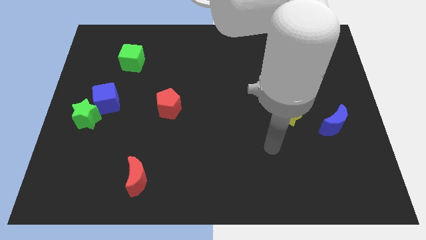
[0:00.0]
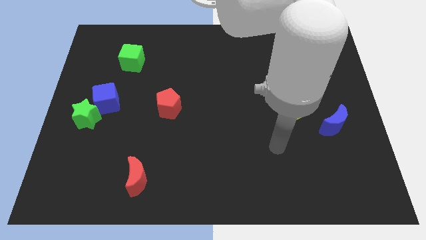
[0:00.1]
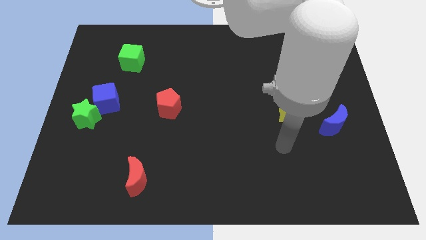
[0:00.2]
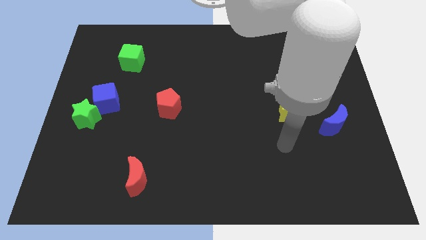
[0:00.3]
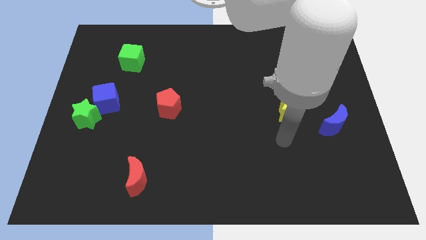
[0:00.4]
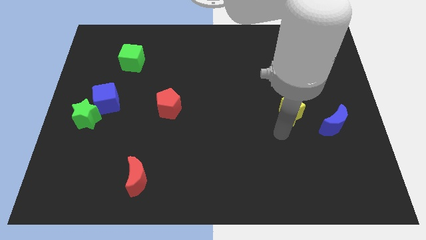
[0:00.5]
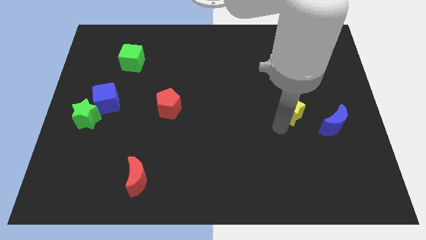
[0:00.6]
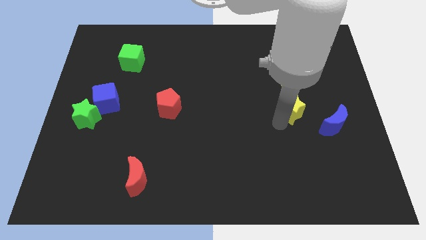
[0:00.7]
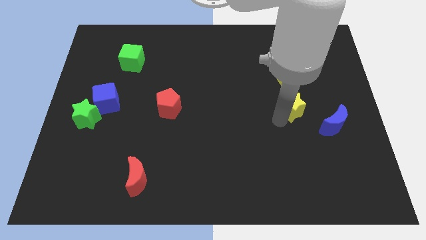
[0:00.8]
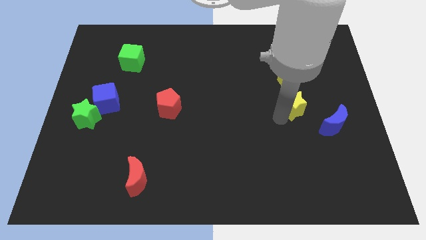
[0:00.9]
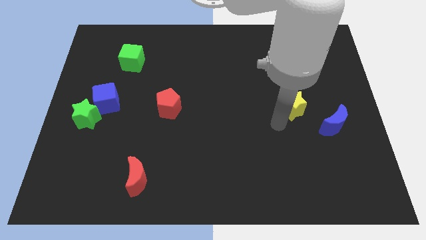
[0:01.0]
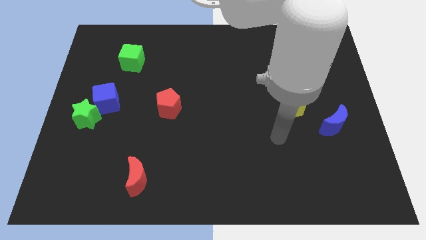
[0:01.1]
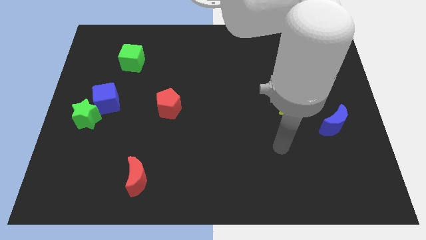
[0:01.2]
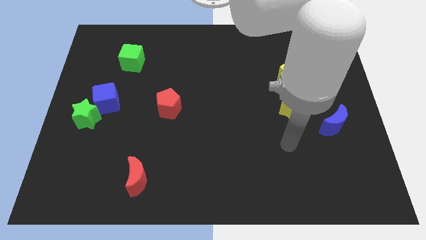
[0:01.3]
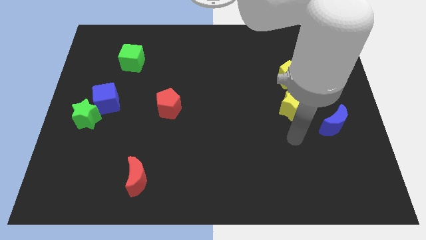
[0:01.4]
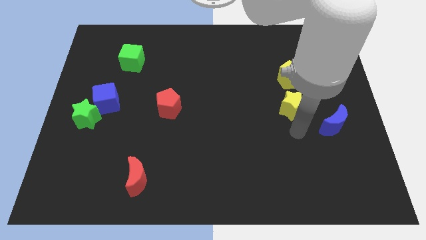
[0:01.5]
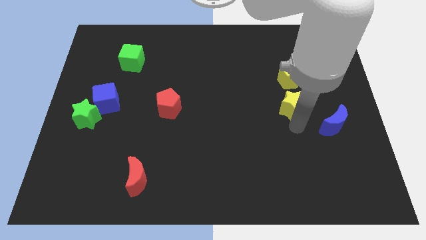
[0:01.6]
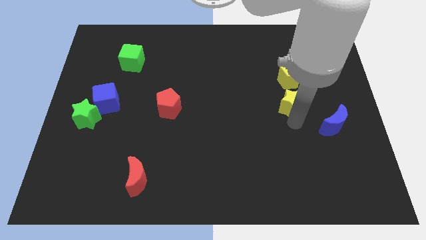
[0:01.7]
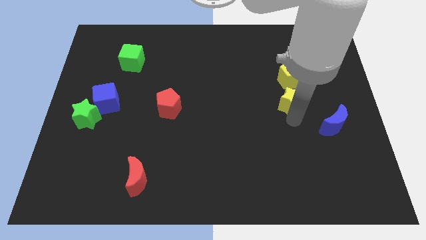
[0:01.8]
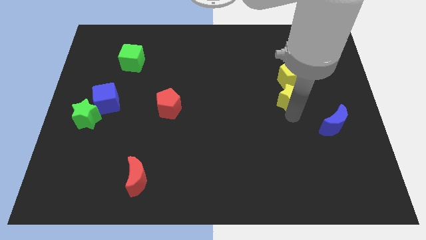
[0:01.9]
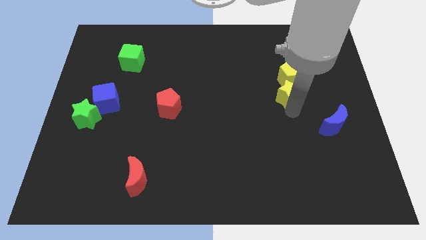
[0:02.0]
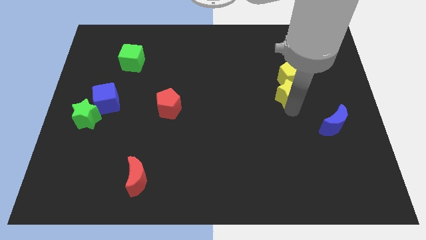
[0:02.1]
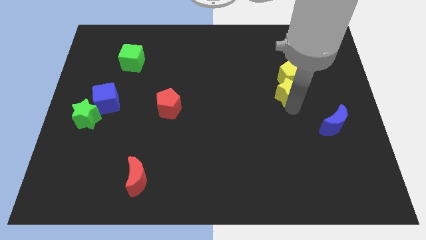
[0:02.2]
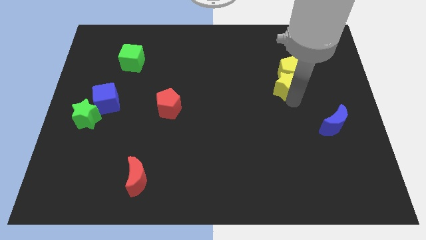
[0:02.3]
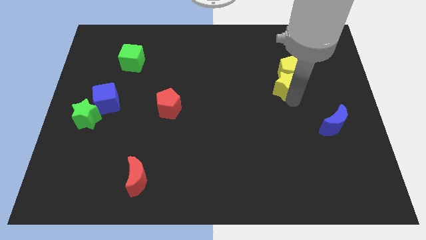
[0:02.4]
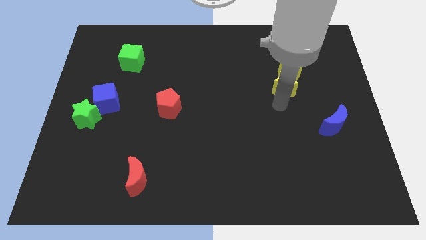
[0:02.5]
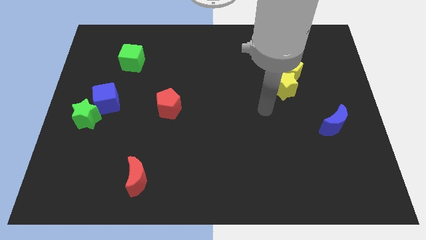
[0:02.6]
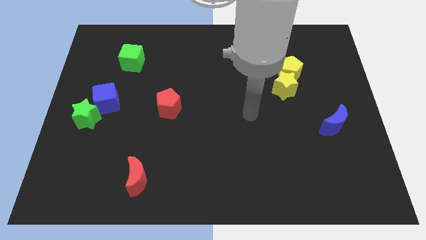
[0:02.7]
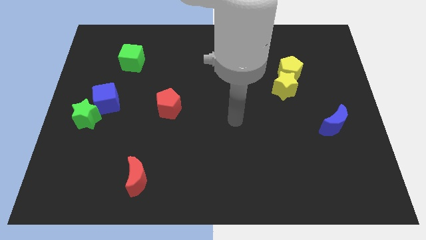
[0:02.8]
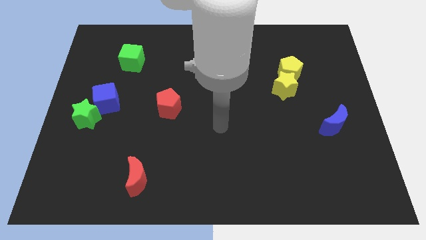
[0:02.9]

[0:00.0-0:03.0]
push the yellow star into the yellow pentagon

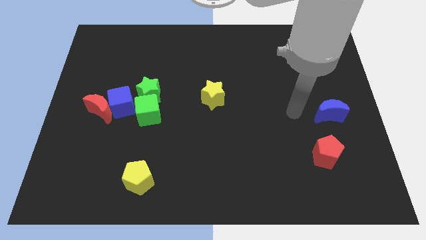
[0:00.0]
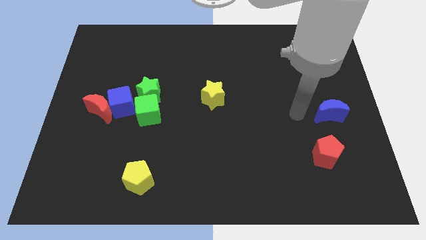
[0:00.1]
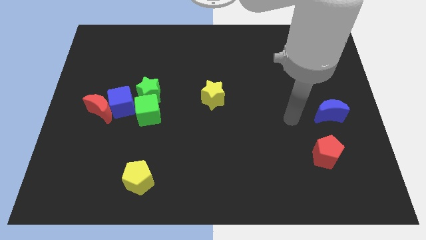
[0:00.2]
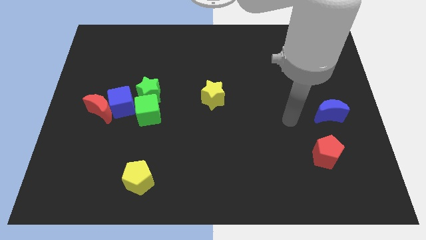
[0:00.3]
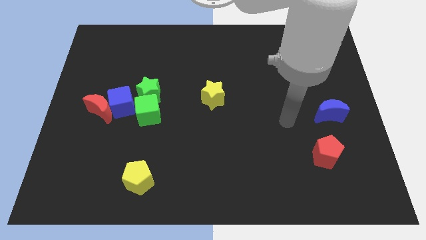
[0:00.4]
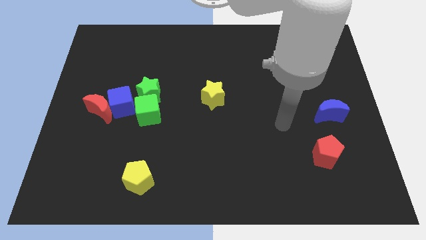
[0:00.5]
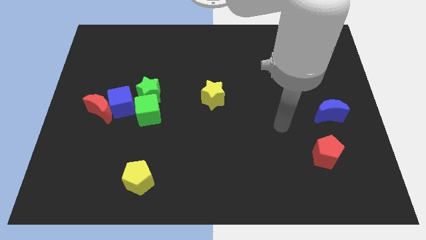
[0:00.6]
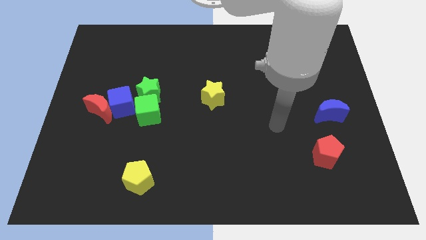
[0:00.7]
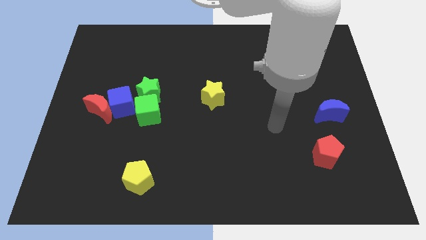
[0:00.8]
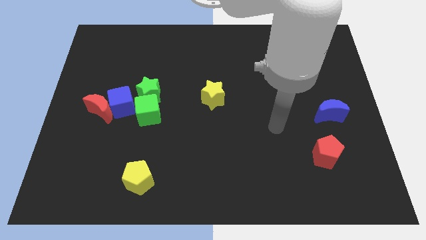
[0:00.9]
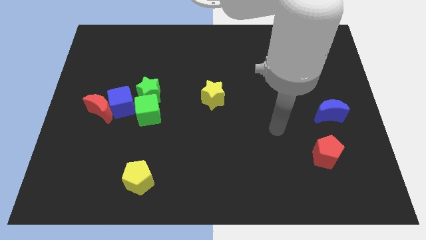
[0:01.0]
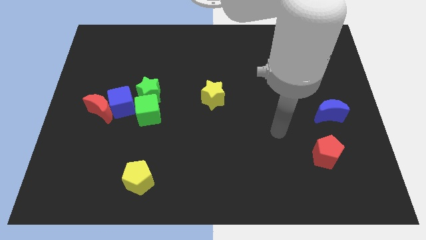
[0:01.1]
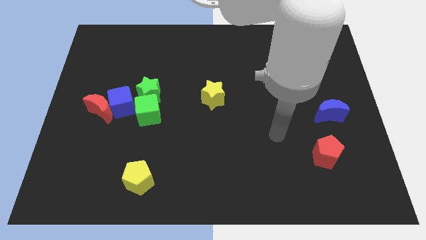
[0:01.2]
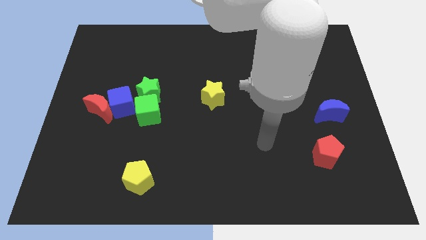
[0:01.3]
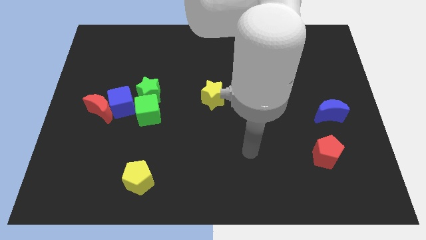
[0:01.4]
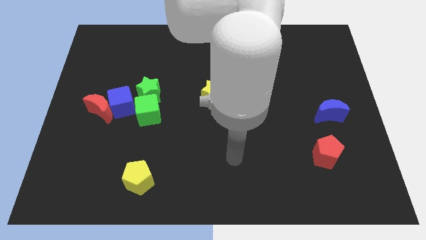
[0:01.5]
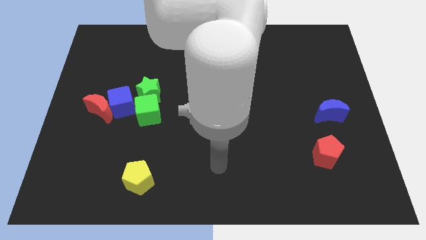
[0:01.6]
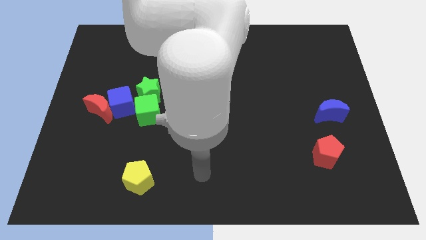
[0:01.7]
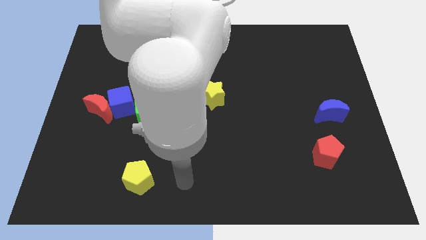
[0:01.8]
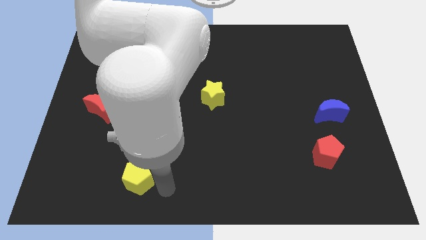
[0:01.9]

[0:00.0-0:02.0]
move your arm towards the yellow pentagon

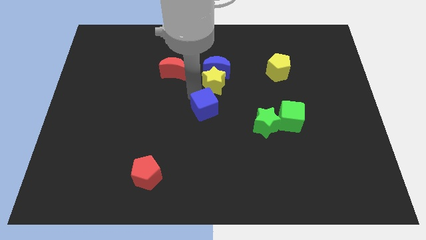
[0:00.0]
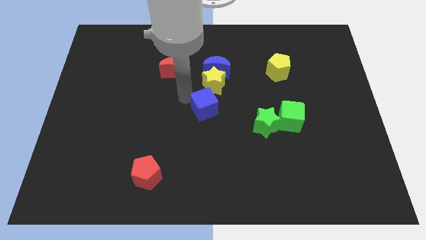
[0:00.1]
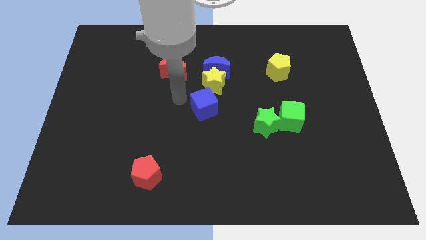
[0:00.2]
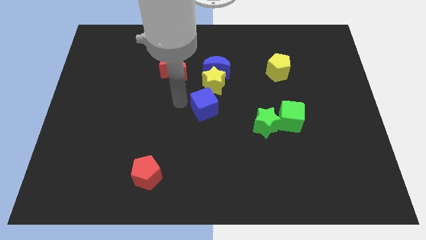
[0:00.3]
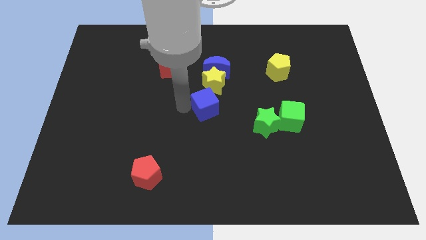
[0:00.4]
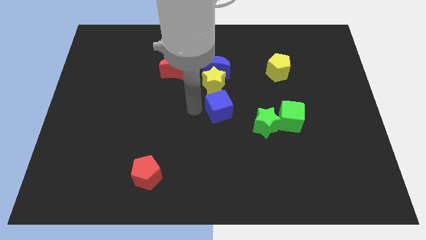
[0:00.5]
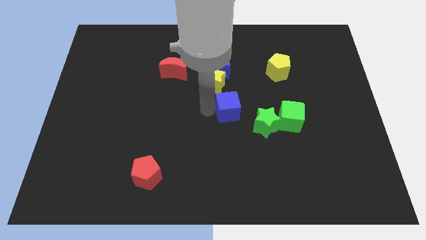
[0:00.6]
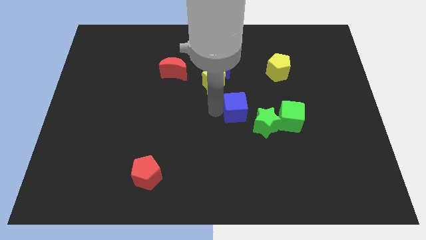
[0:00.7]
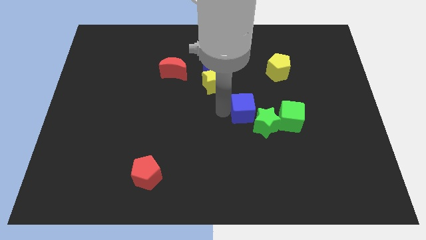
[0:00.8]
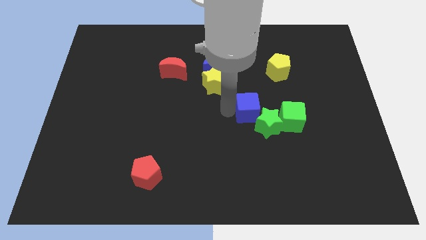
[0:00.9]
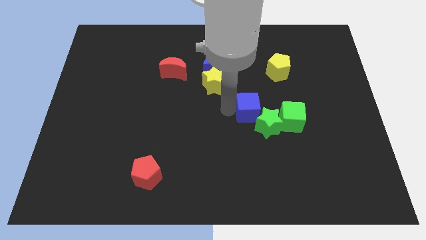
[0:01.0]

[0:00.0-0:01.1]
make the blue cube touch the top left side of the green star

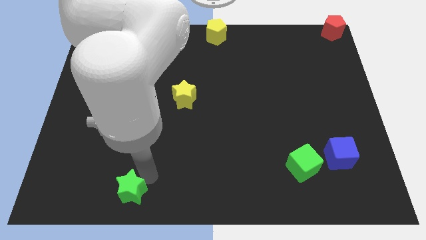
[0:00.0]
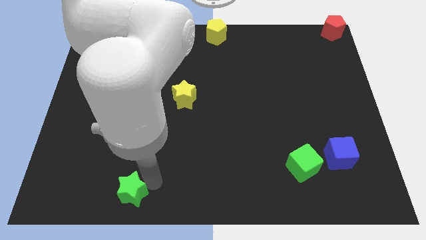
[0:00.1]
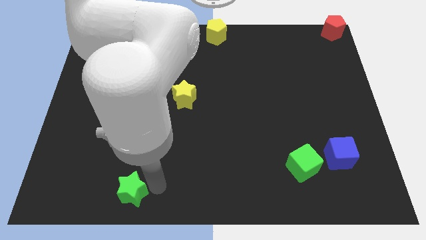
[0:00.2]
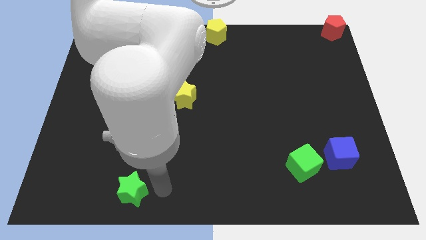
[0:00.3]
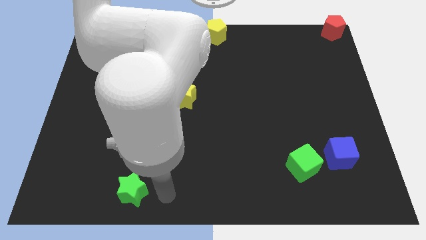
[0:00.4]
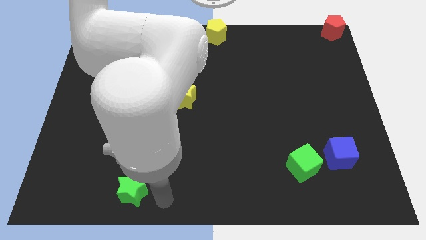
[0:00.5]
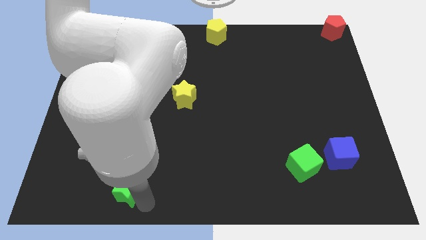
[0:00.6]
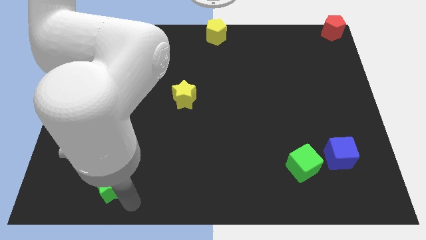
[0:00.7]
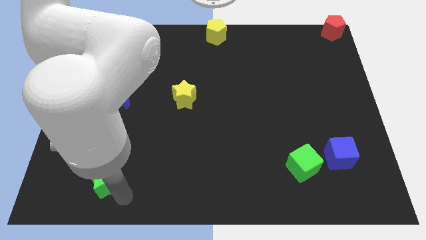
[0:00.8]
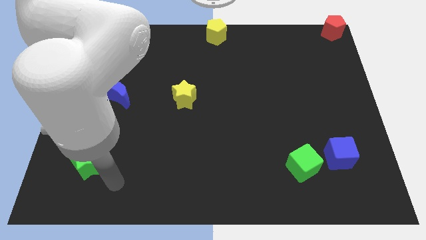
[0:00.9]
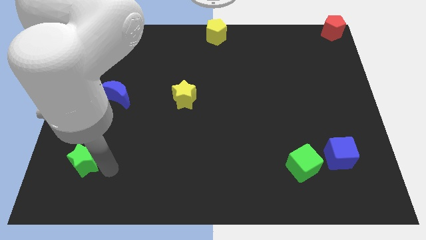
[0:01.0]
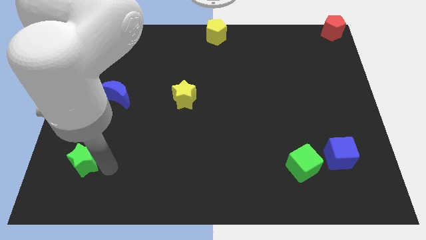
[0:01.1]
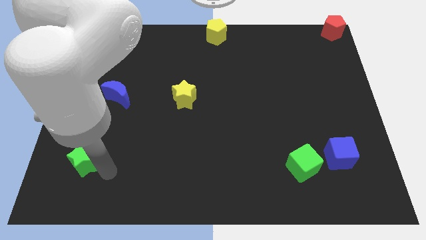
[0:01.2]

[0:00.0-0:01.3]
place the green star diagonally to yellow star

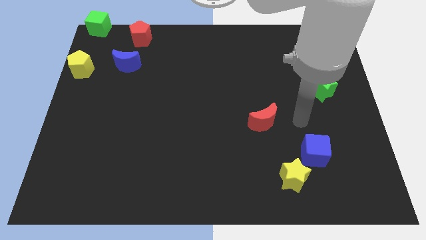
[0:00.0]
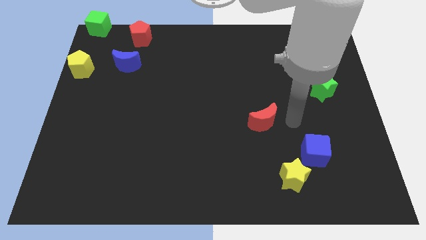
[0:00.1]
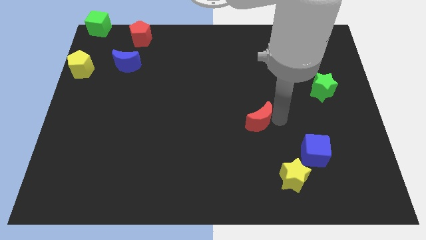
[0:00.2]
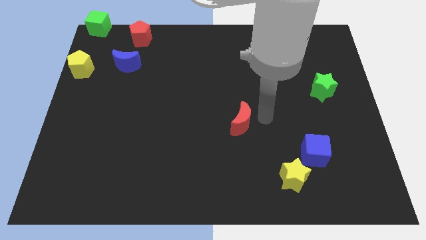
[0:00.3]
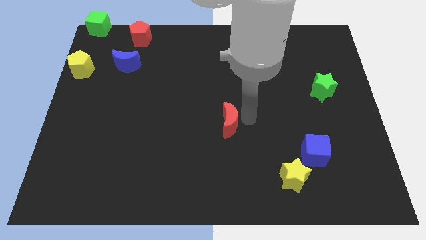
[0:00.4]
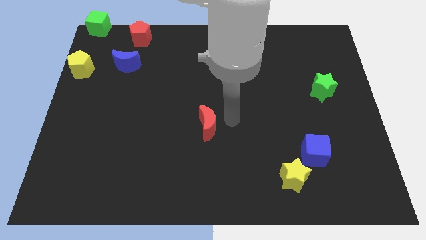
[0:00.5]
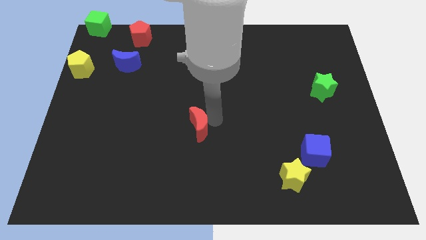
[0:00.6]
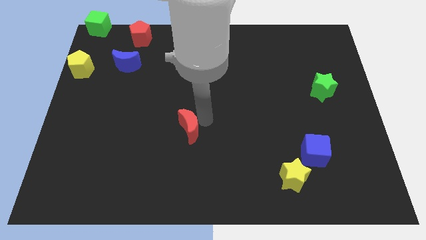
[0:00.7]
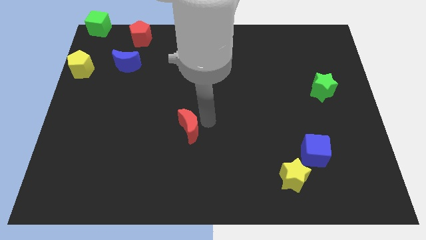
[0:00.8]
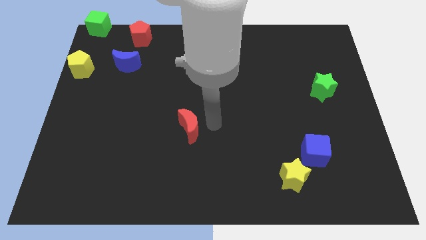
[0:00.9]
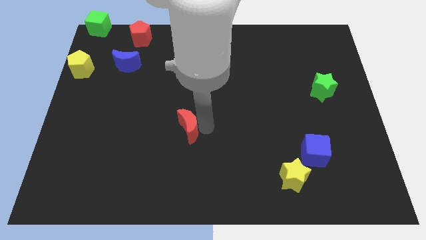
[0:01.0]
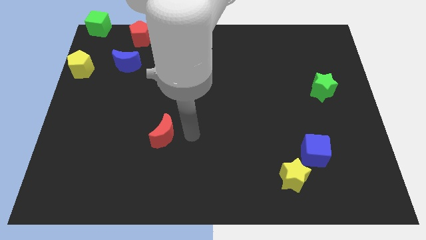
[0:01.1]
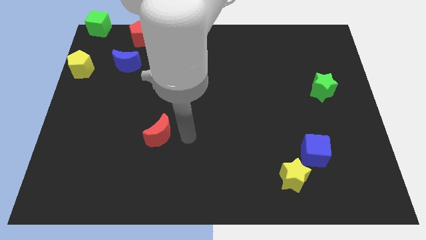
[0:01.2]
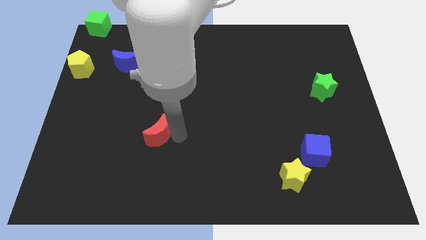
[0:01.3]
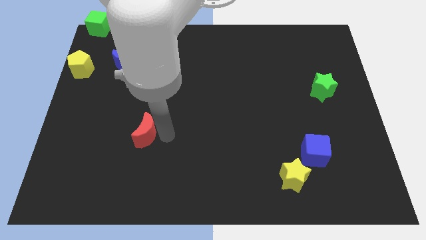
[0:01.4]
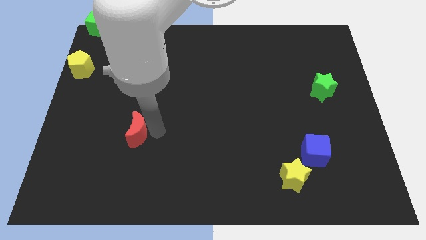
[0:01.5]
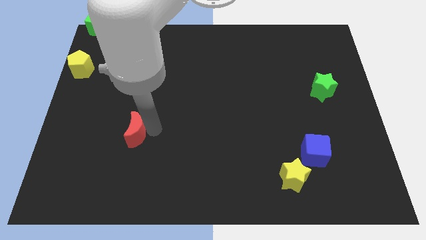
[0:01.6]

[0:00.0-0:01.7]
push the red moon towards the left side of the board
